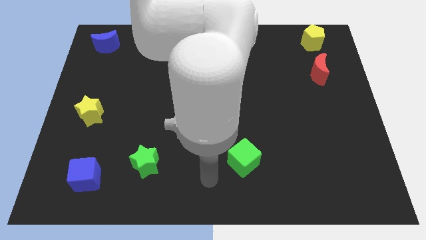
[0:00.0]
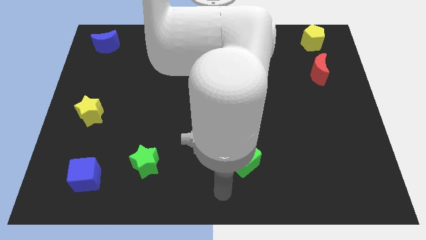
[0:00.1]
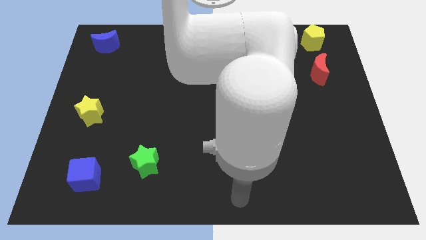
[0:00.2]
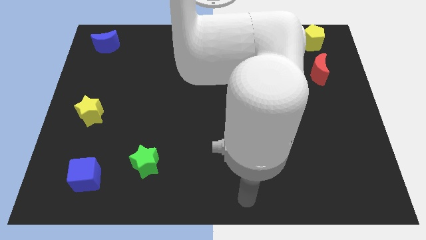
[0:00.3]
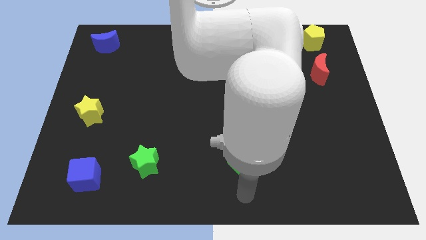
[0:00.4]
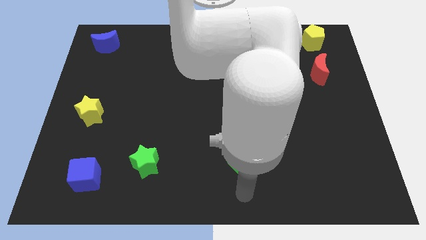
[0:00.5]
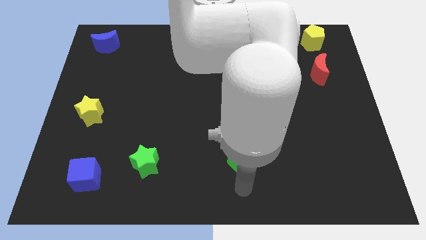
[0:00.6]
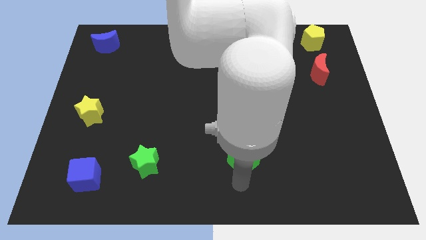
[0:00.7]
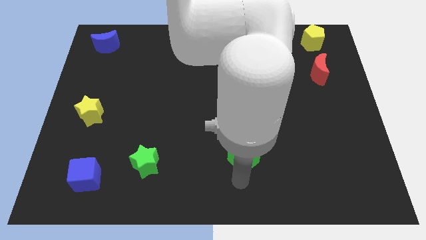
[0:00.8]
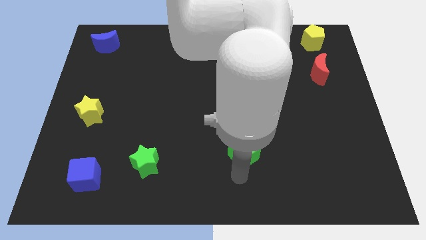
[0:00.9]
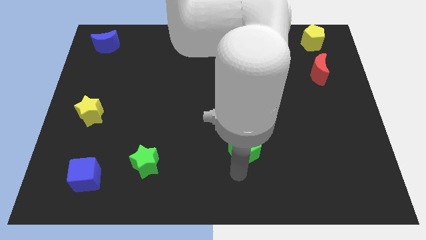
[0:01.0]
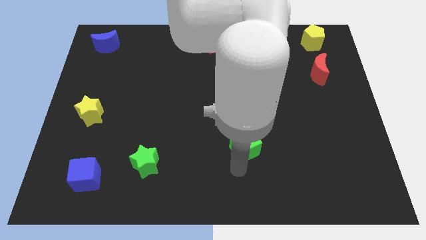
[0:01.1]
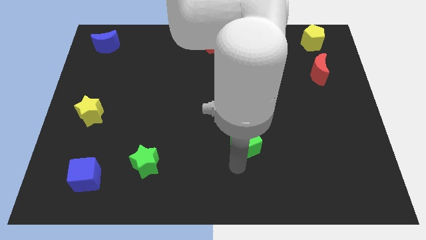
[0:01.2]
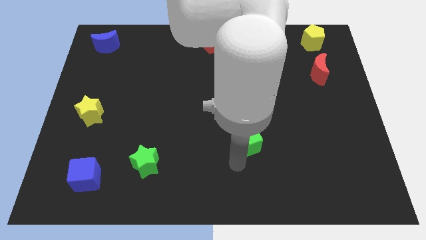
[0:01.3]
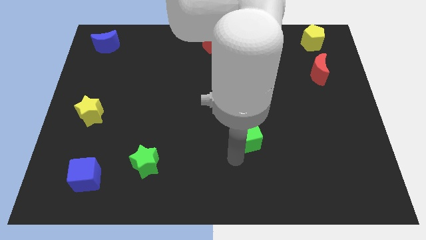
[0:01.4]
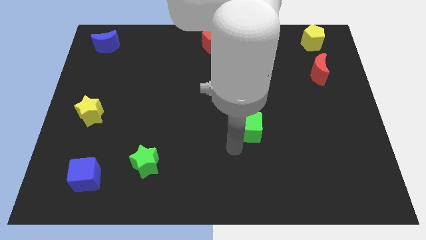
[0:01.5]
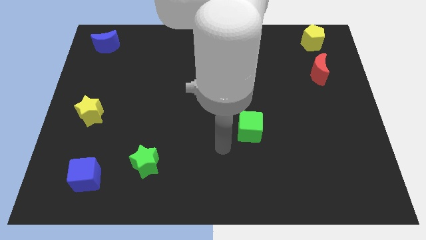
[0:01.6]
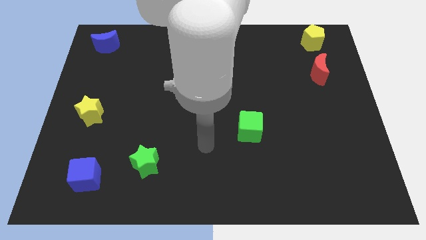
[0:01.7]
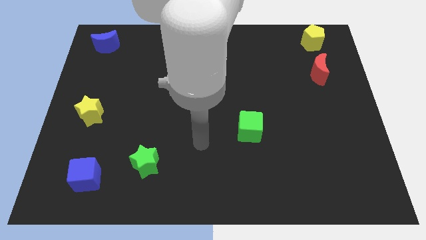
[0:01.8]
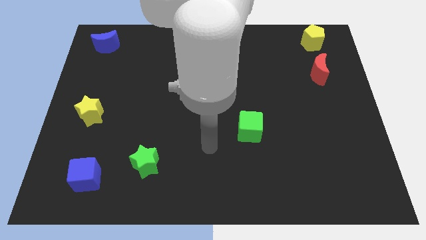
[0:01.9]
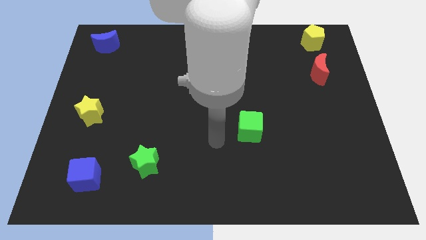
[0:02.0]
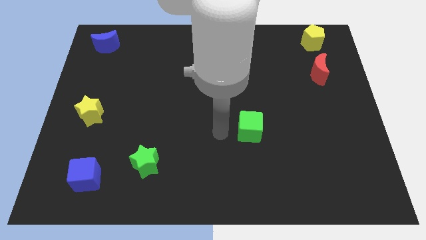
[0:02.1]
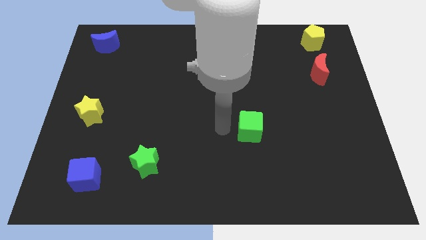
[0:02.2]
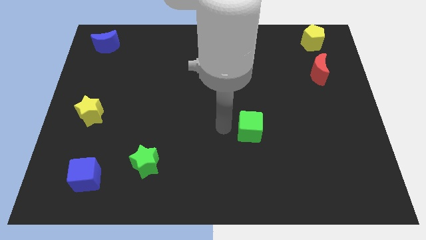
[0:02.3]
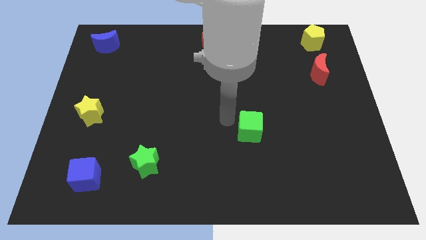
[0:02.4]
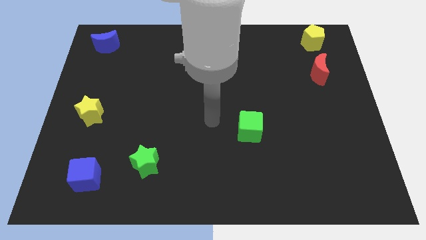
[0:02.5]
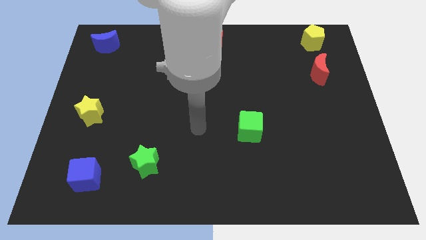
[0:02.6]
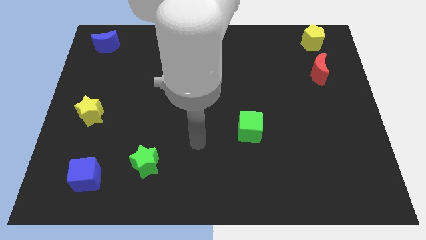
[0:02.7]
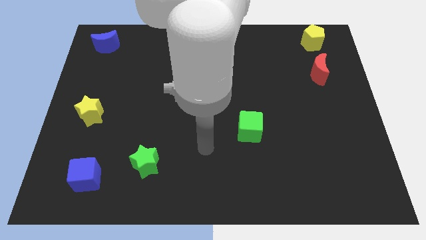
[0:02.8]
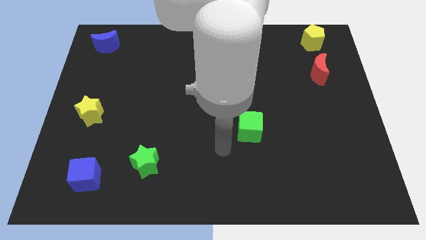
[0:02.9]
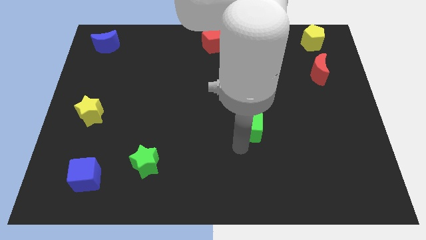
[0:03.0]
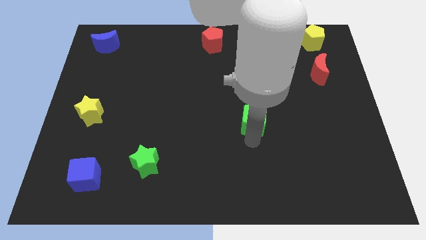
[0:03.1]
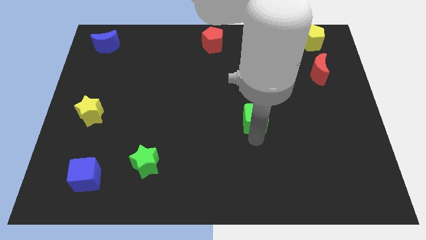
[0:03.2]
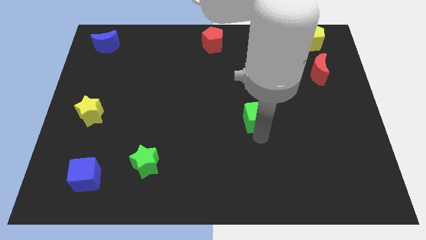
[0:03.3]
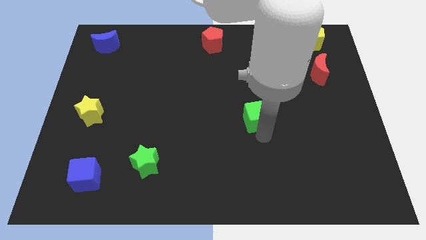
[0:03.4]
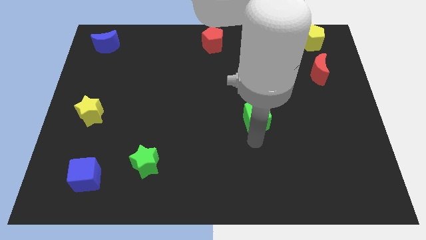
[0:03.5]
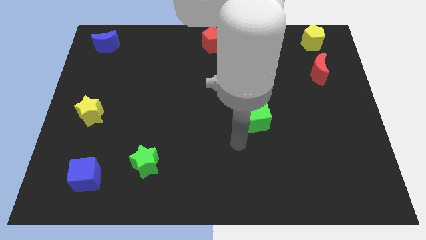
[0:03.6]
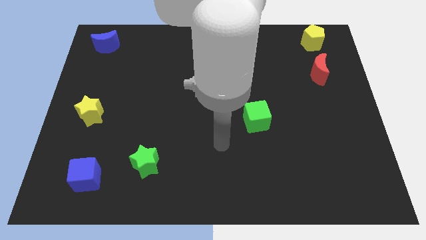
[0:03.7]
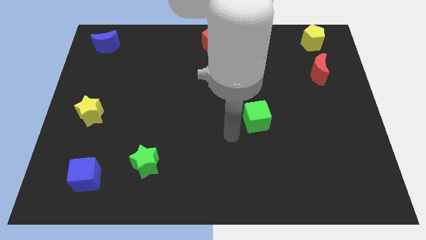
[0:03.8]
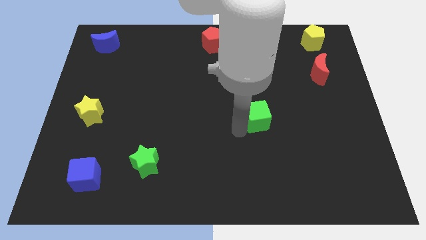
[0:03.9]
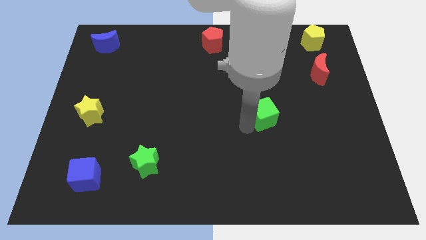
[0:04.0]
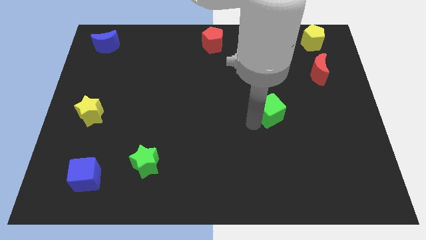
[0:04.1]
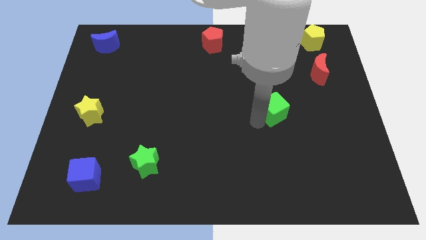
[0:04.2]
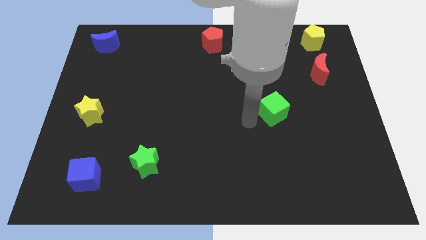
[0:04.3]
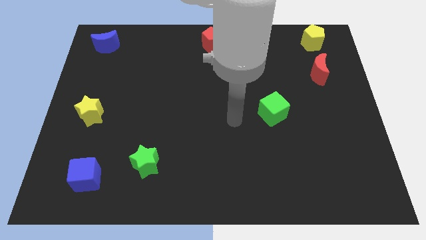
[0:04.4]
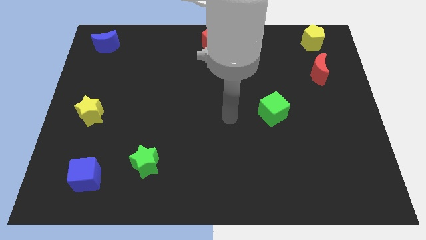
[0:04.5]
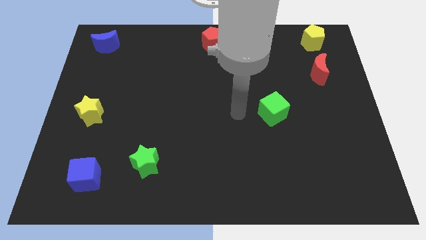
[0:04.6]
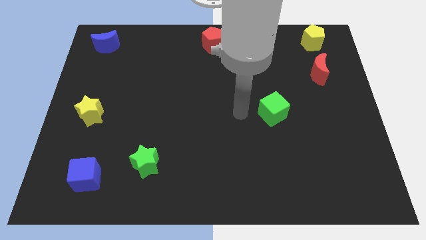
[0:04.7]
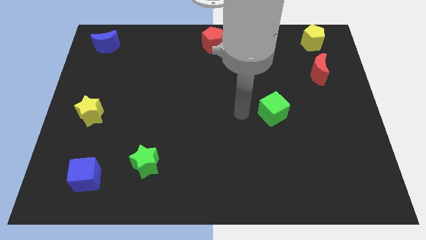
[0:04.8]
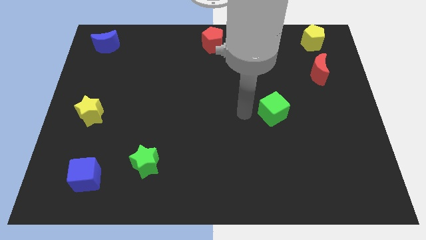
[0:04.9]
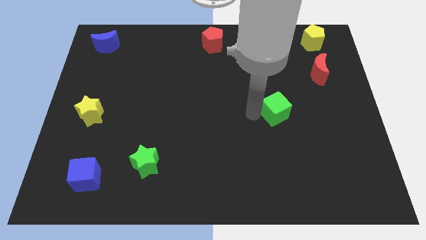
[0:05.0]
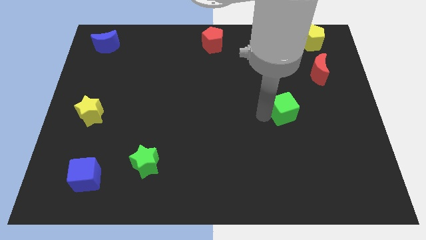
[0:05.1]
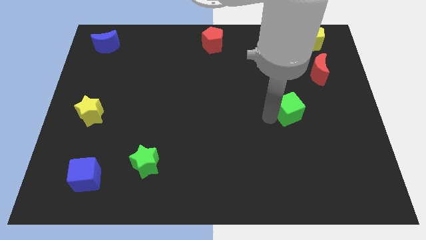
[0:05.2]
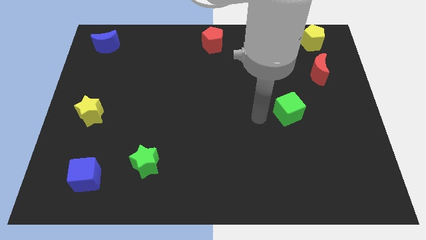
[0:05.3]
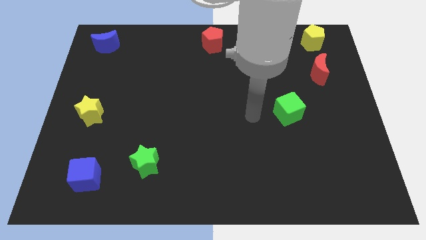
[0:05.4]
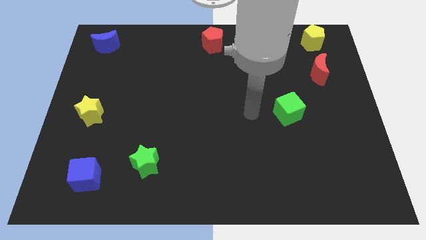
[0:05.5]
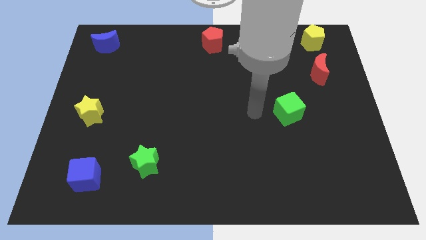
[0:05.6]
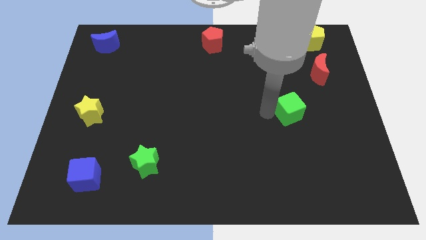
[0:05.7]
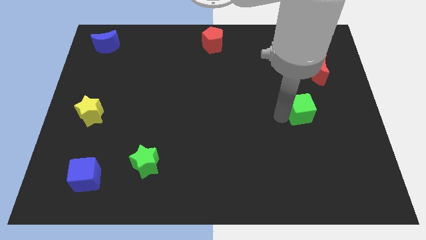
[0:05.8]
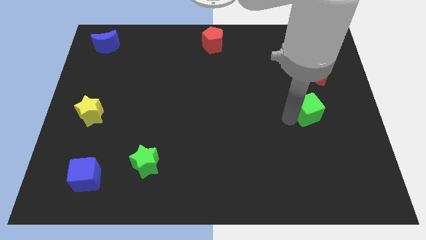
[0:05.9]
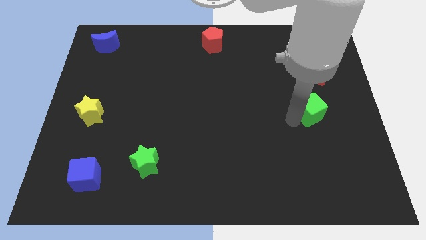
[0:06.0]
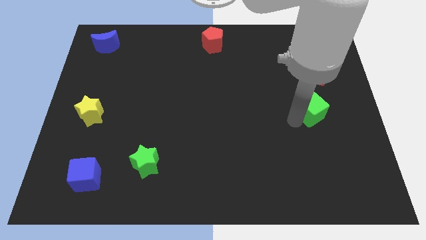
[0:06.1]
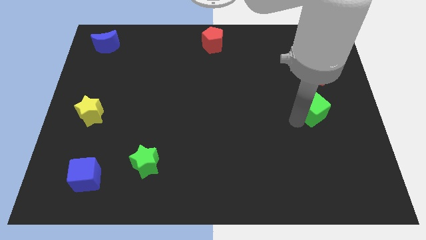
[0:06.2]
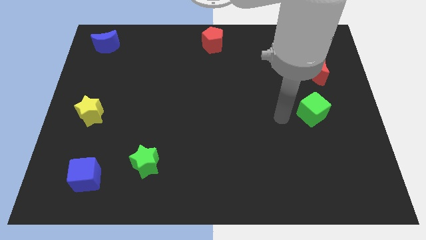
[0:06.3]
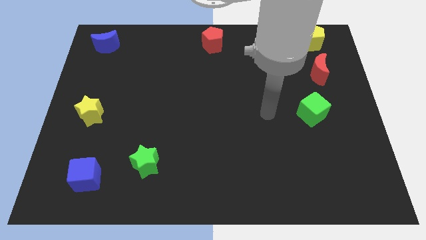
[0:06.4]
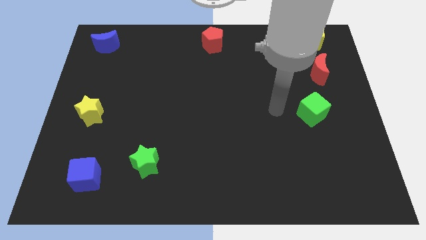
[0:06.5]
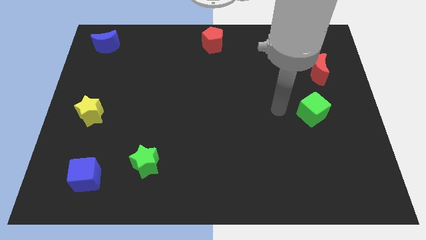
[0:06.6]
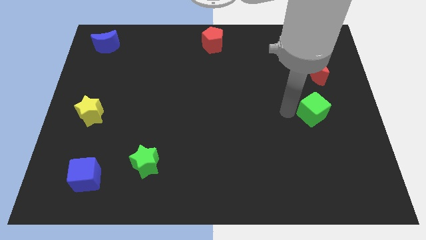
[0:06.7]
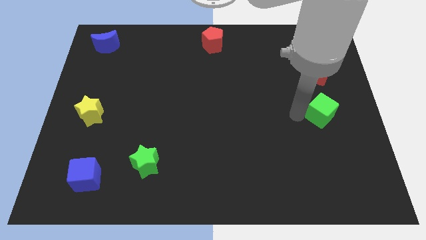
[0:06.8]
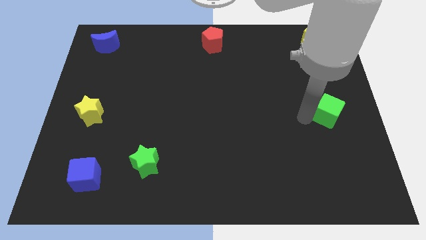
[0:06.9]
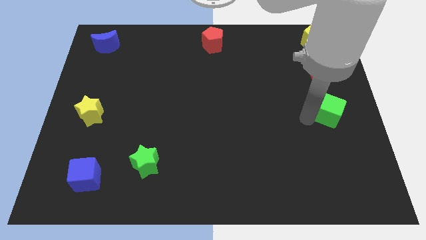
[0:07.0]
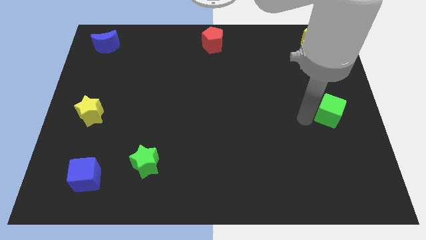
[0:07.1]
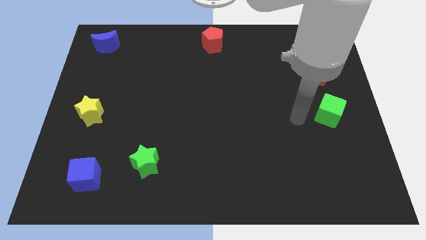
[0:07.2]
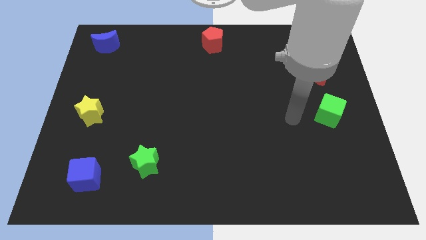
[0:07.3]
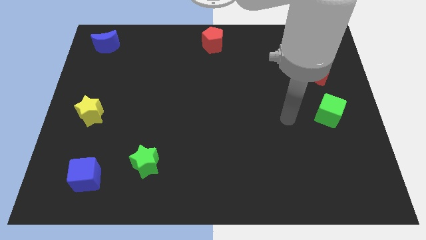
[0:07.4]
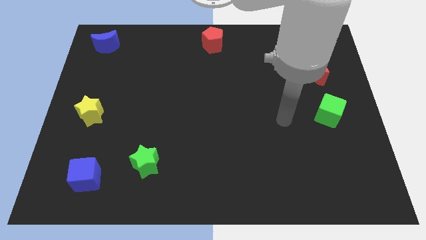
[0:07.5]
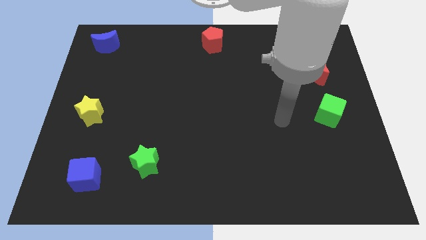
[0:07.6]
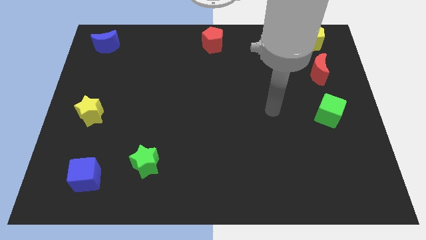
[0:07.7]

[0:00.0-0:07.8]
place the green cube vertically below the bottom side of the red crescent

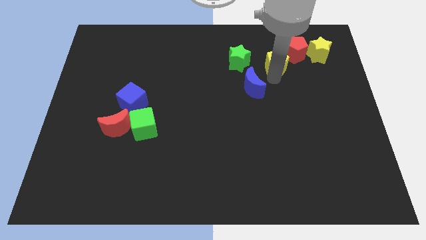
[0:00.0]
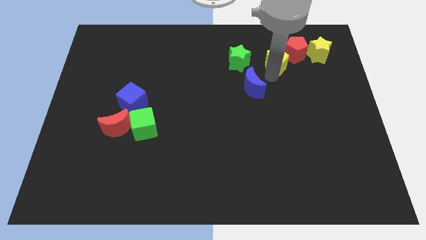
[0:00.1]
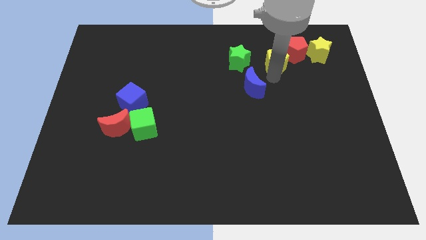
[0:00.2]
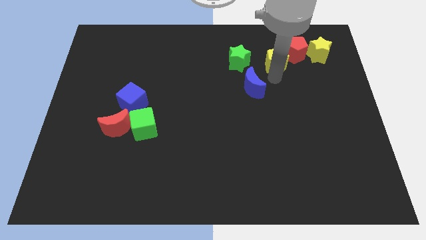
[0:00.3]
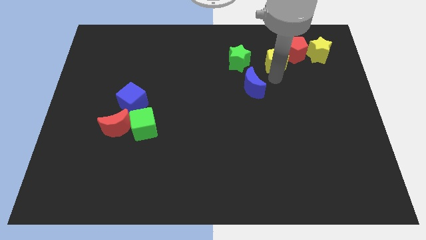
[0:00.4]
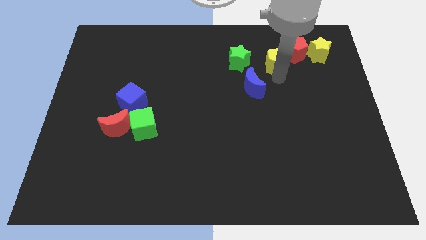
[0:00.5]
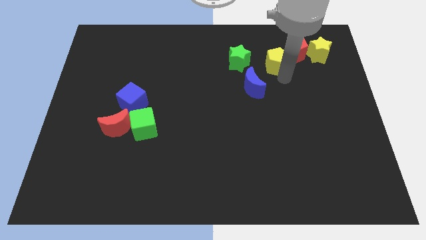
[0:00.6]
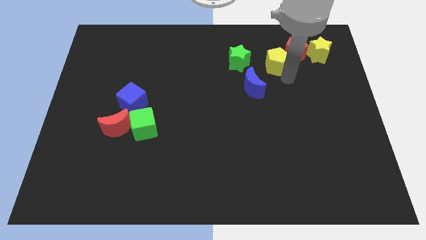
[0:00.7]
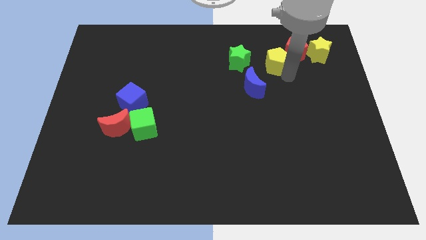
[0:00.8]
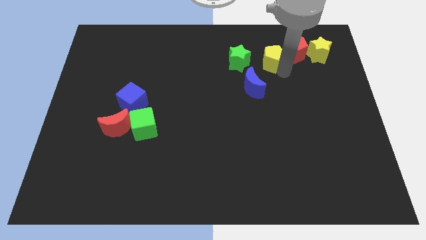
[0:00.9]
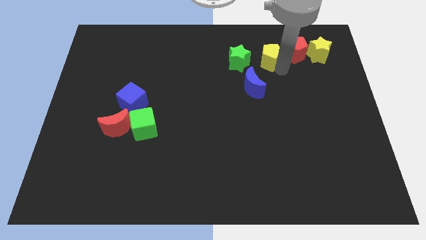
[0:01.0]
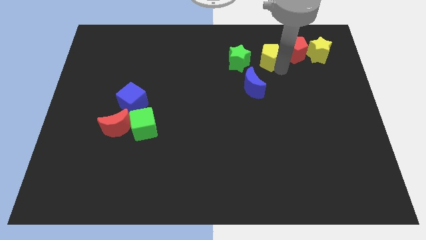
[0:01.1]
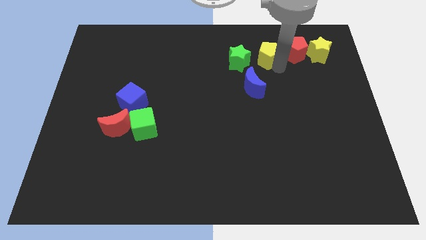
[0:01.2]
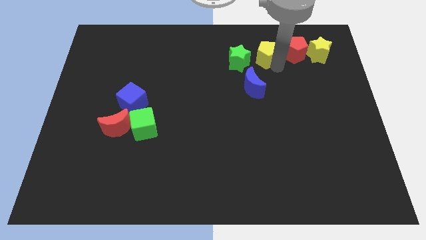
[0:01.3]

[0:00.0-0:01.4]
move the yellow pentagon between the green star and red pentagon
